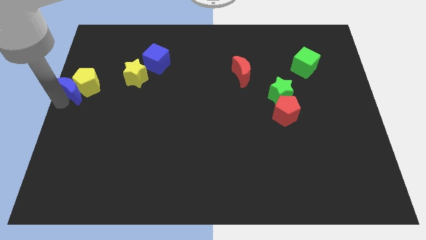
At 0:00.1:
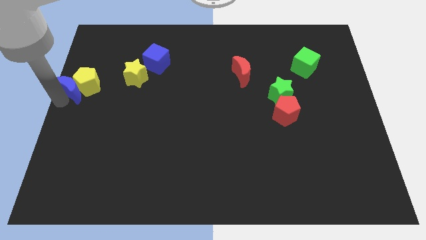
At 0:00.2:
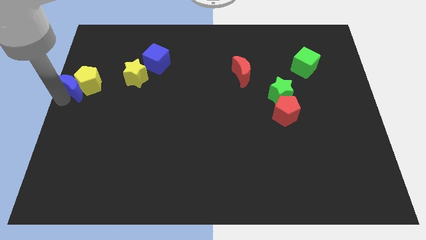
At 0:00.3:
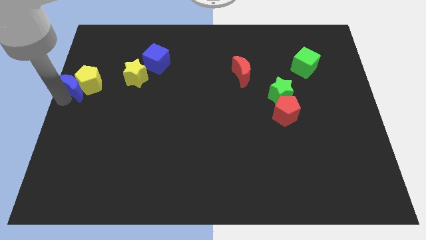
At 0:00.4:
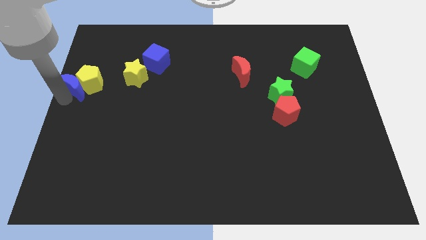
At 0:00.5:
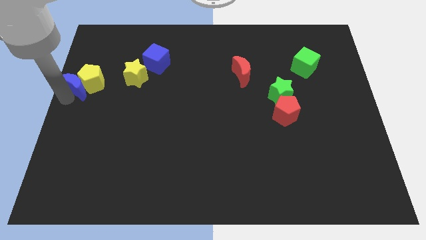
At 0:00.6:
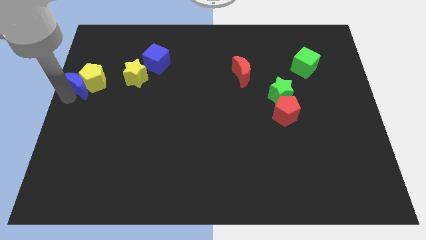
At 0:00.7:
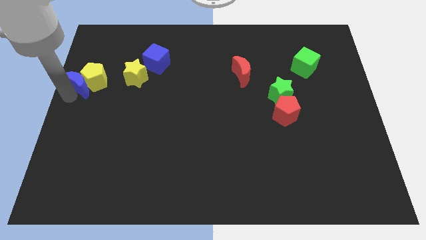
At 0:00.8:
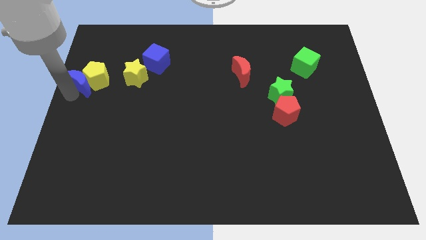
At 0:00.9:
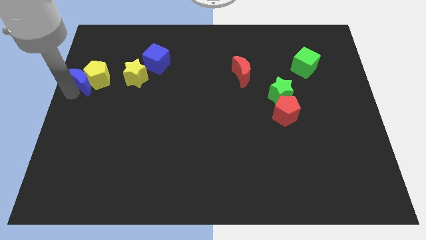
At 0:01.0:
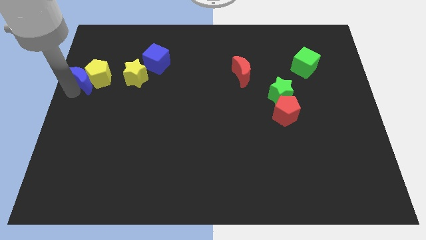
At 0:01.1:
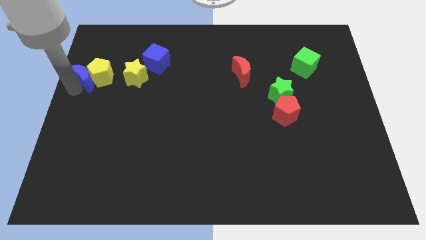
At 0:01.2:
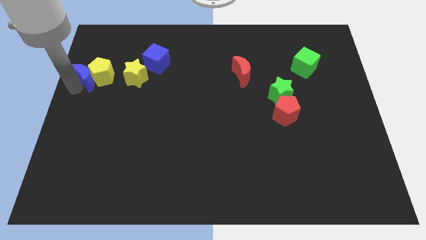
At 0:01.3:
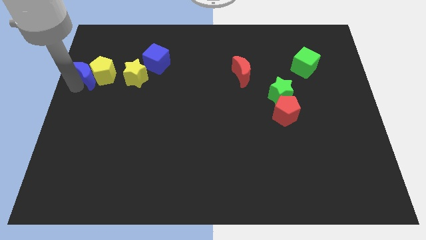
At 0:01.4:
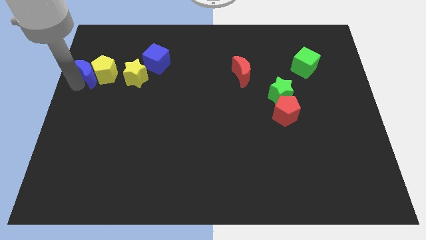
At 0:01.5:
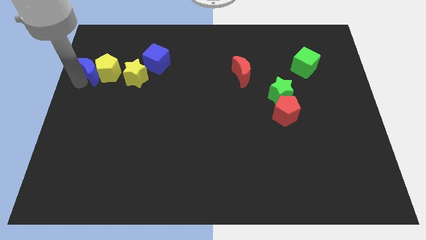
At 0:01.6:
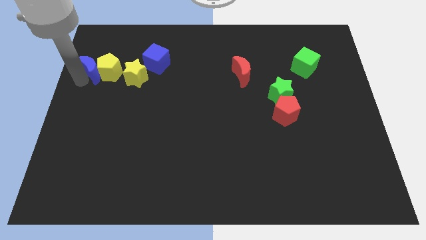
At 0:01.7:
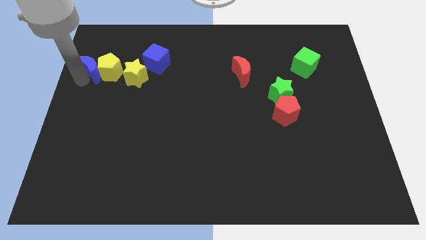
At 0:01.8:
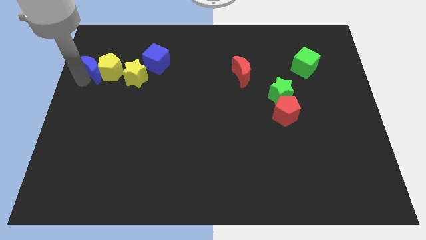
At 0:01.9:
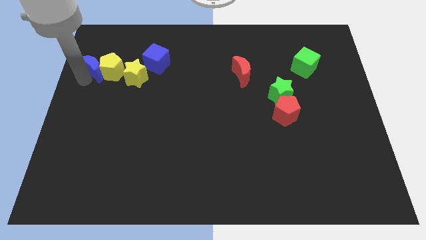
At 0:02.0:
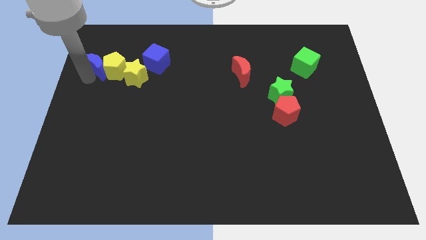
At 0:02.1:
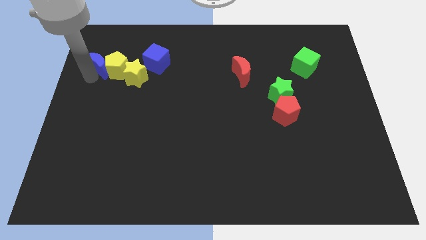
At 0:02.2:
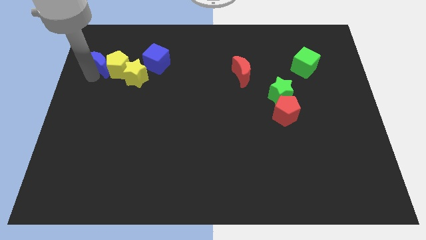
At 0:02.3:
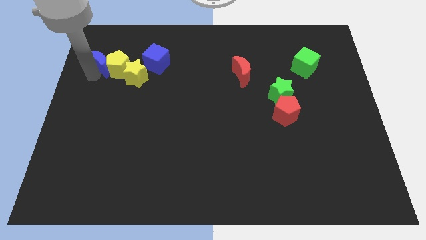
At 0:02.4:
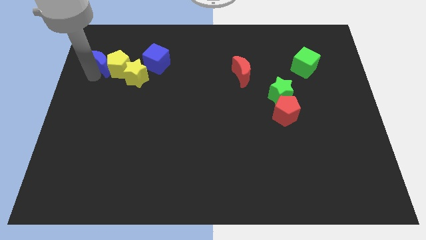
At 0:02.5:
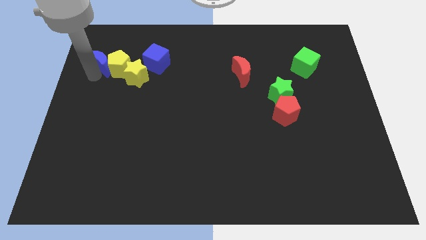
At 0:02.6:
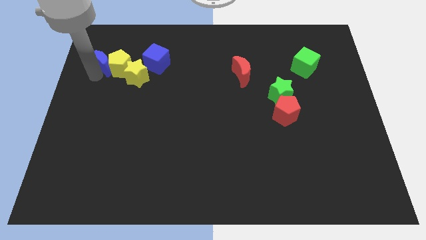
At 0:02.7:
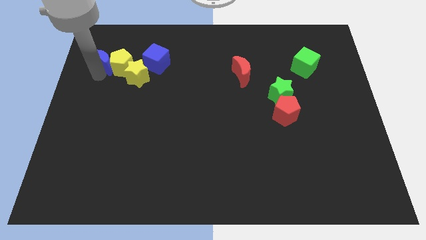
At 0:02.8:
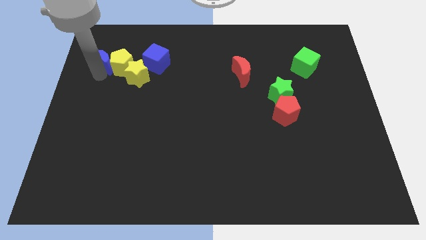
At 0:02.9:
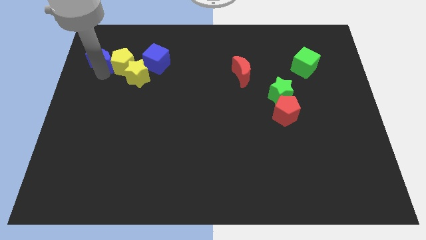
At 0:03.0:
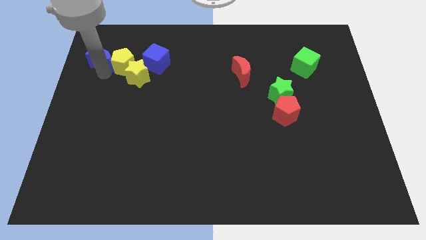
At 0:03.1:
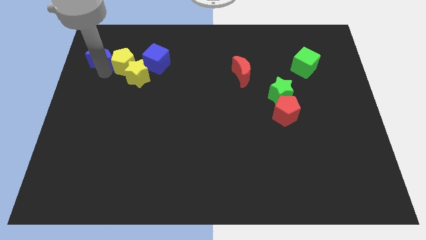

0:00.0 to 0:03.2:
move the blue moon and yellow pentagon horizontal to the blue cube

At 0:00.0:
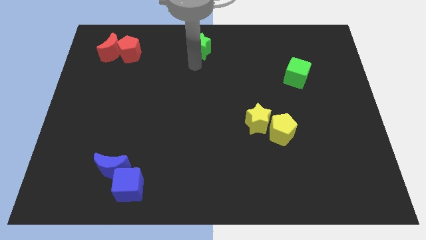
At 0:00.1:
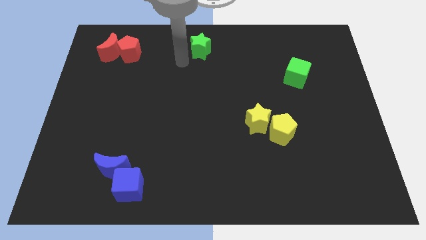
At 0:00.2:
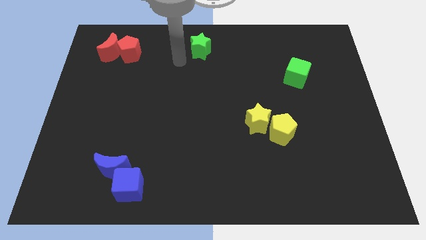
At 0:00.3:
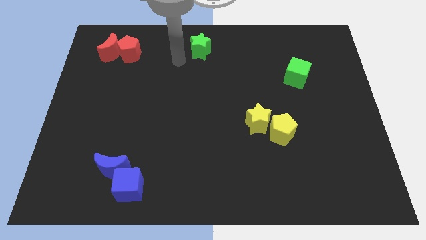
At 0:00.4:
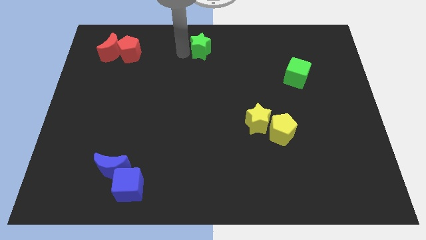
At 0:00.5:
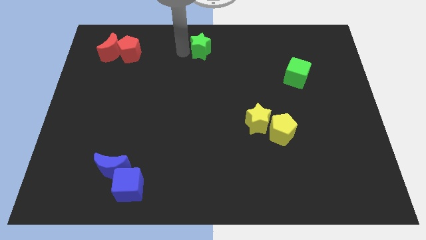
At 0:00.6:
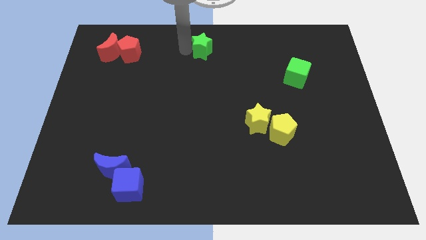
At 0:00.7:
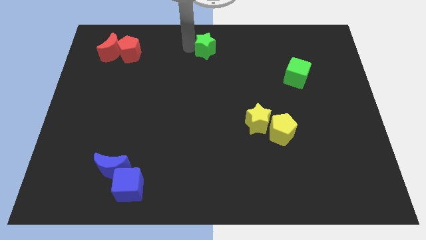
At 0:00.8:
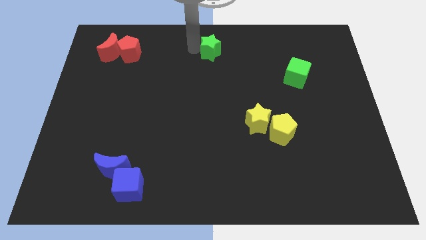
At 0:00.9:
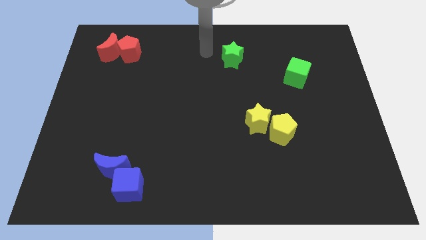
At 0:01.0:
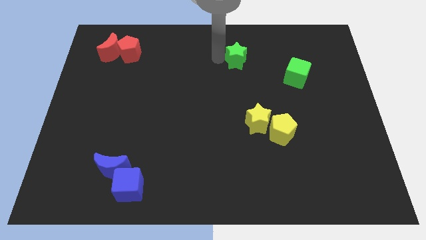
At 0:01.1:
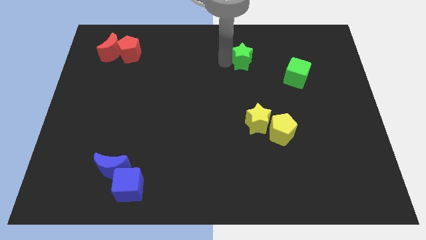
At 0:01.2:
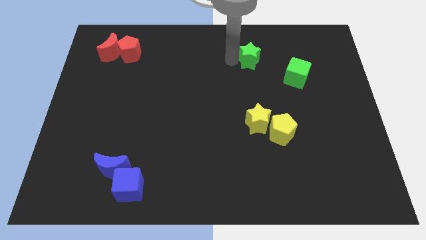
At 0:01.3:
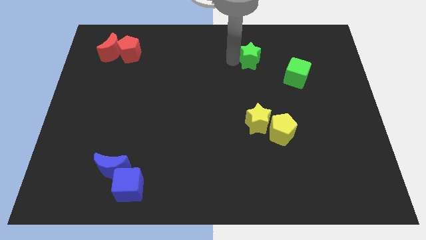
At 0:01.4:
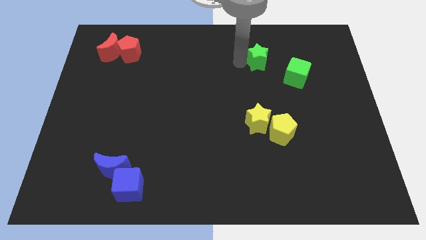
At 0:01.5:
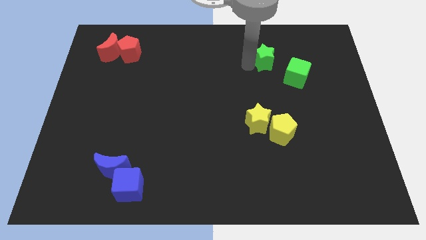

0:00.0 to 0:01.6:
push the green star towards the green cube

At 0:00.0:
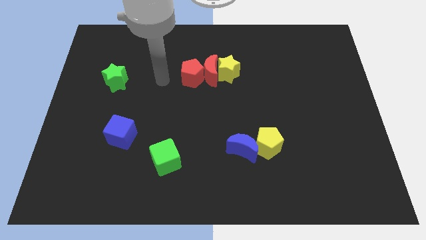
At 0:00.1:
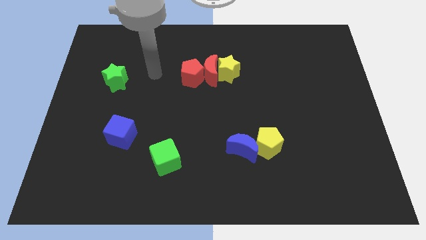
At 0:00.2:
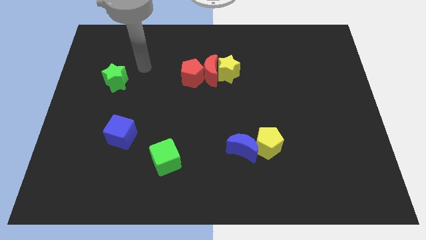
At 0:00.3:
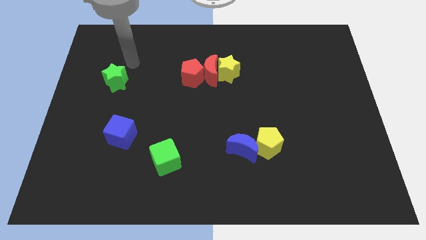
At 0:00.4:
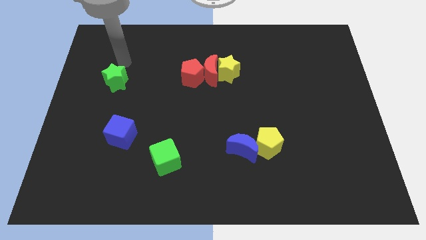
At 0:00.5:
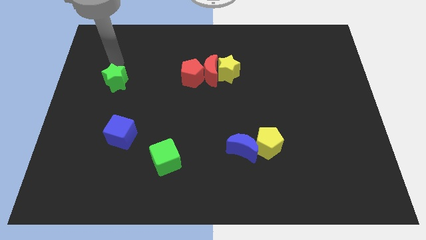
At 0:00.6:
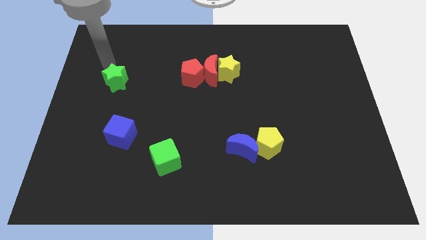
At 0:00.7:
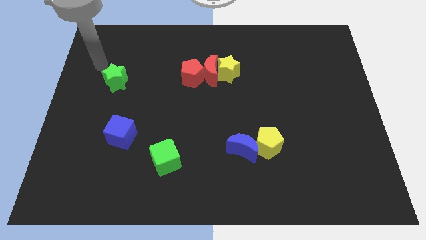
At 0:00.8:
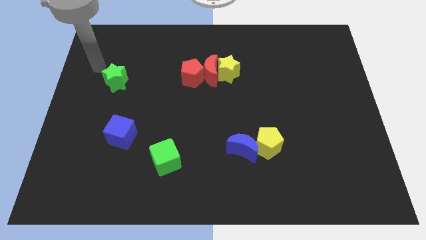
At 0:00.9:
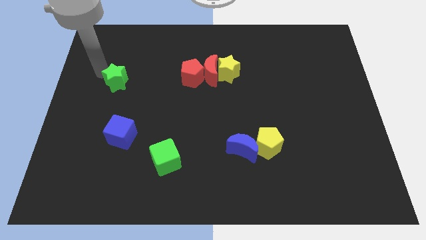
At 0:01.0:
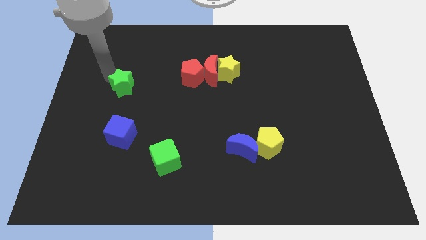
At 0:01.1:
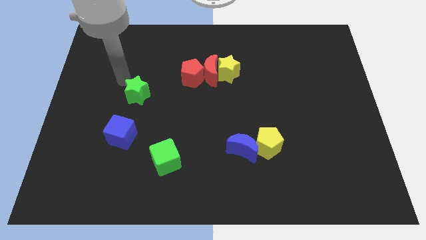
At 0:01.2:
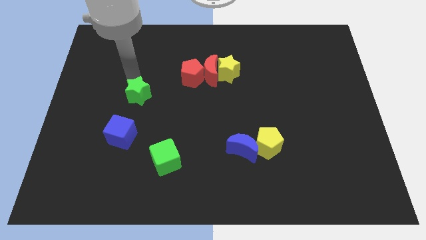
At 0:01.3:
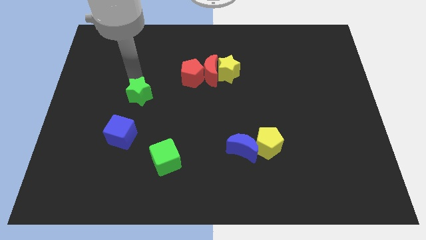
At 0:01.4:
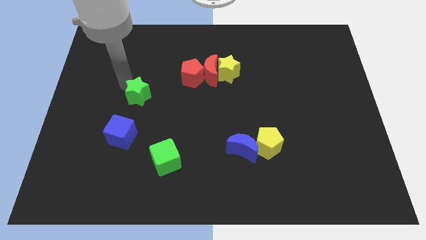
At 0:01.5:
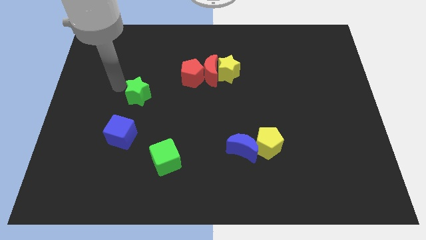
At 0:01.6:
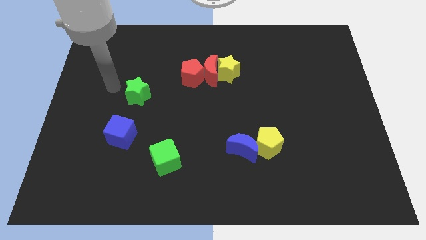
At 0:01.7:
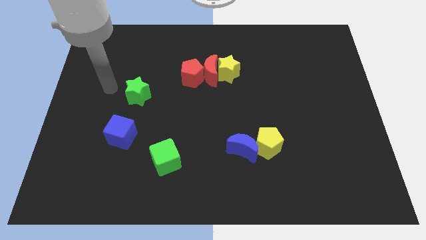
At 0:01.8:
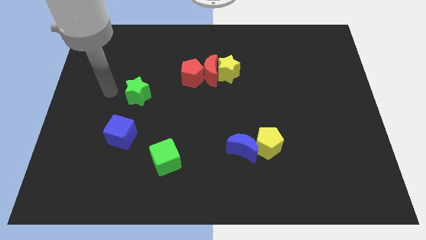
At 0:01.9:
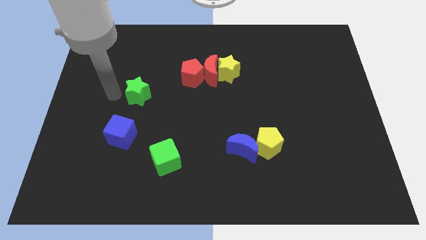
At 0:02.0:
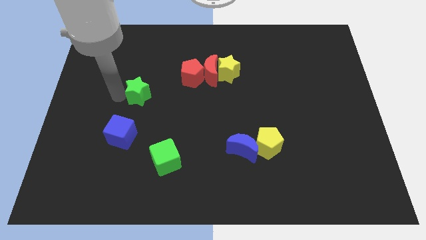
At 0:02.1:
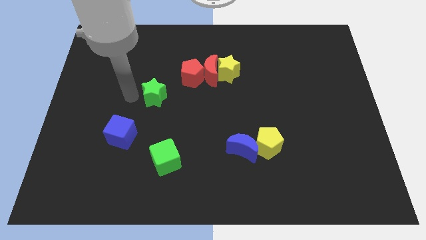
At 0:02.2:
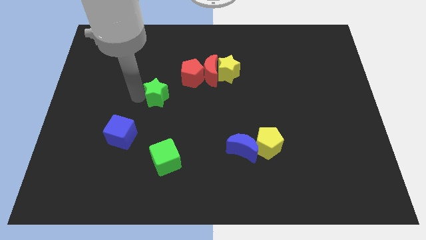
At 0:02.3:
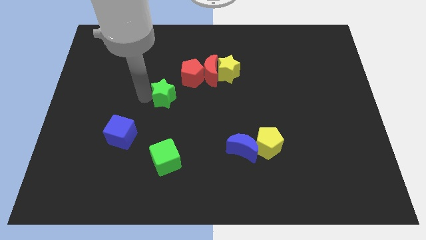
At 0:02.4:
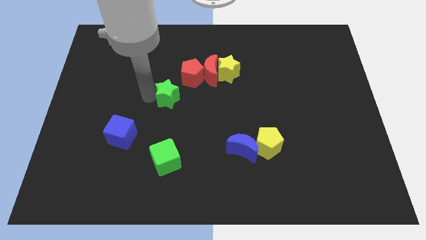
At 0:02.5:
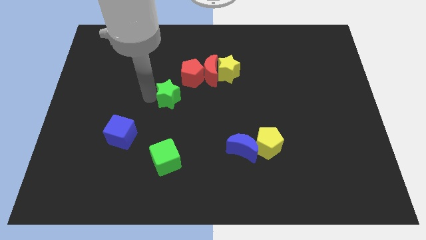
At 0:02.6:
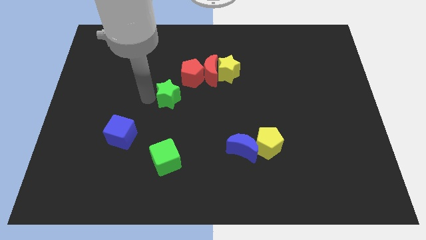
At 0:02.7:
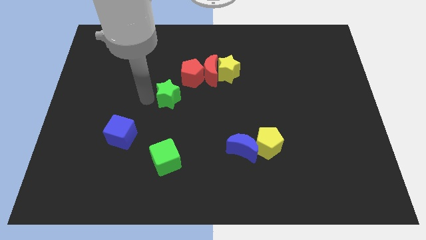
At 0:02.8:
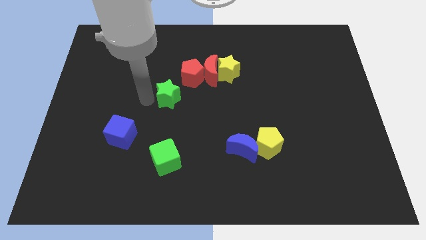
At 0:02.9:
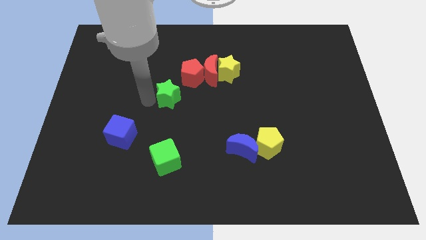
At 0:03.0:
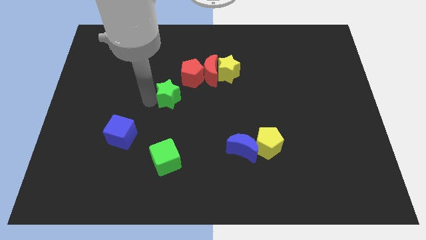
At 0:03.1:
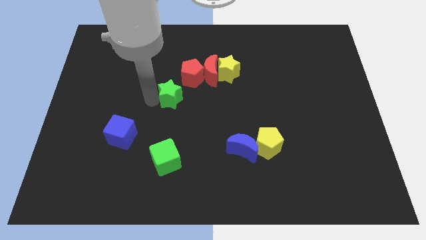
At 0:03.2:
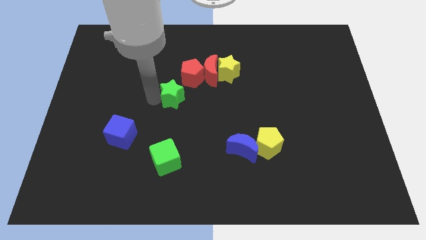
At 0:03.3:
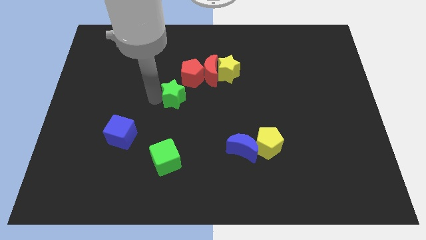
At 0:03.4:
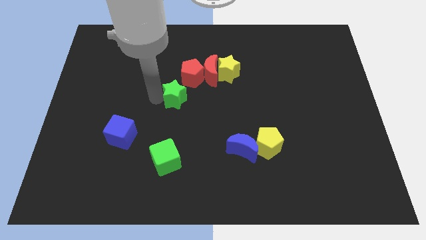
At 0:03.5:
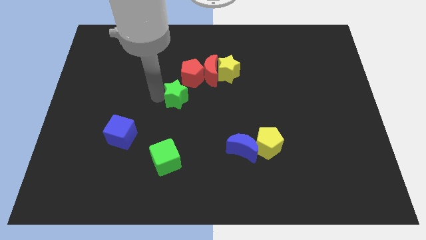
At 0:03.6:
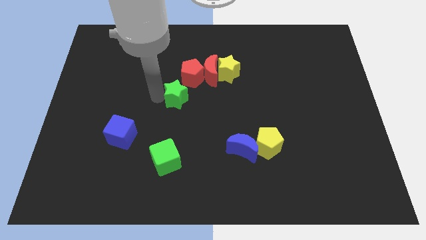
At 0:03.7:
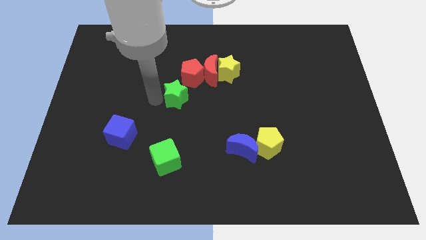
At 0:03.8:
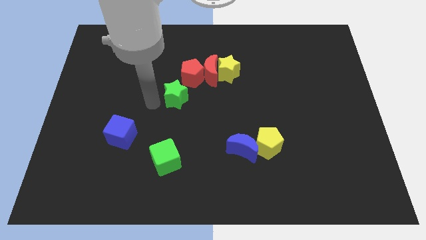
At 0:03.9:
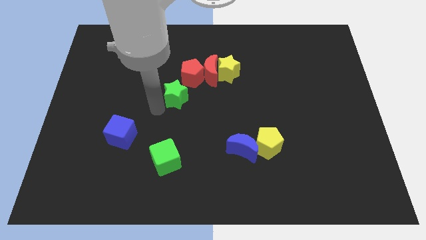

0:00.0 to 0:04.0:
place the green star below the red pentagon

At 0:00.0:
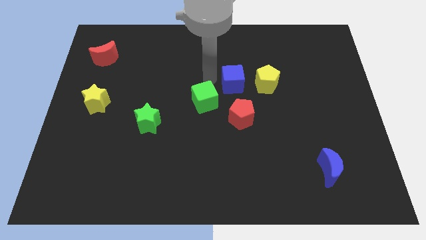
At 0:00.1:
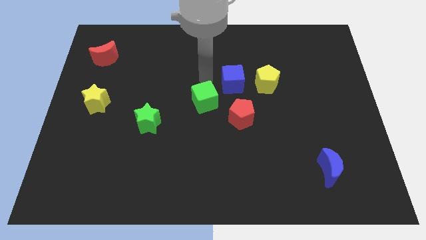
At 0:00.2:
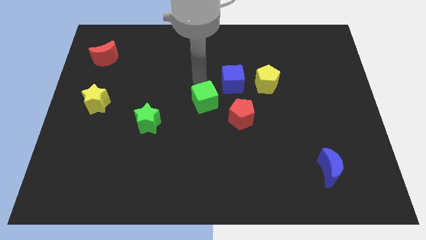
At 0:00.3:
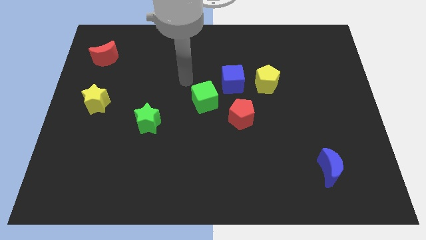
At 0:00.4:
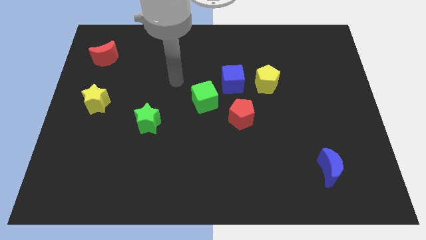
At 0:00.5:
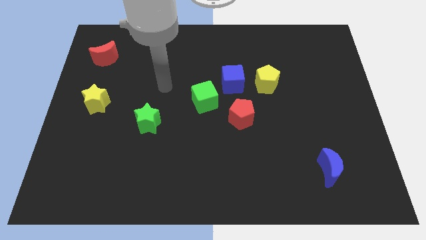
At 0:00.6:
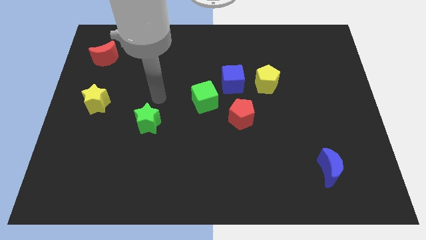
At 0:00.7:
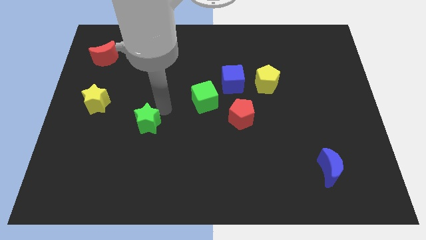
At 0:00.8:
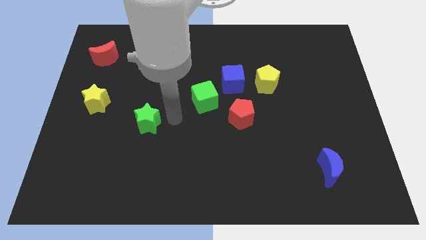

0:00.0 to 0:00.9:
place your arm in between the green blocks
